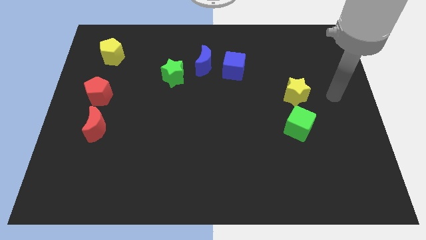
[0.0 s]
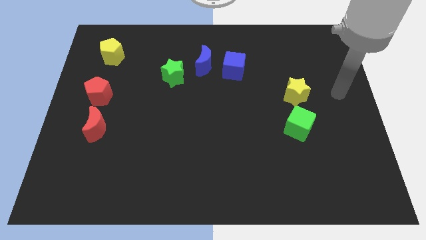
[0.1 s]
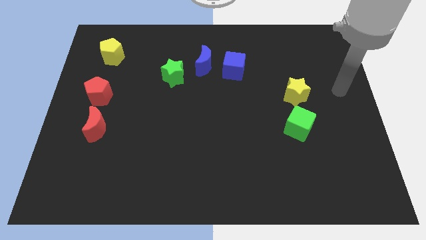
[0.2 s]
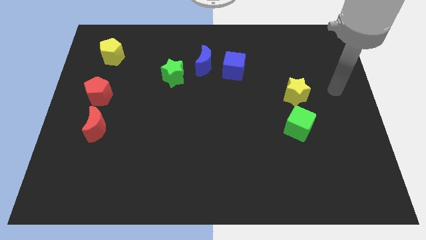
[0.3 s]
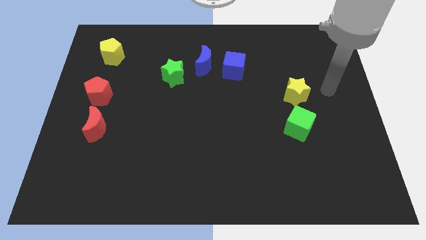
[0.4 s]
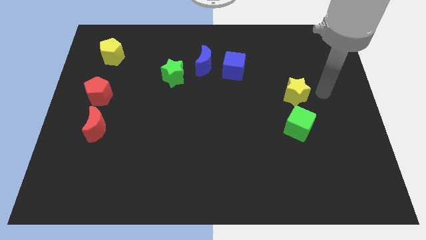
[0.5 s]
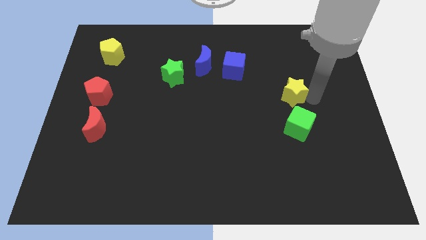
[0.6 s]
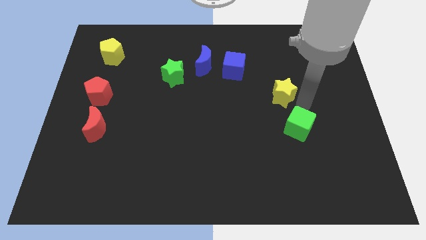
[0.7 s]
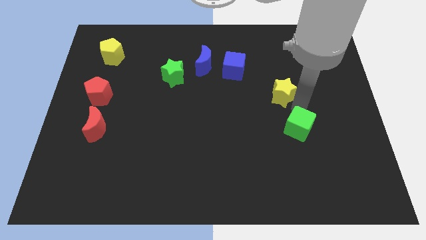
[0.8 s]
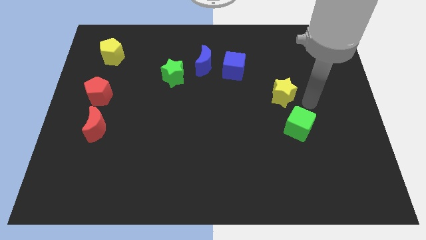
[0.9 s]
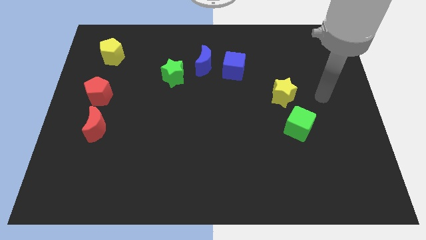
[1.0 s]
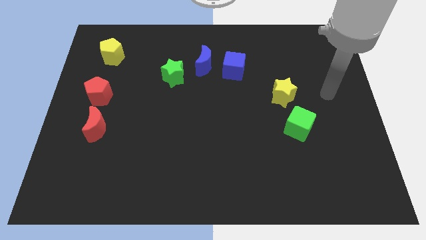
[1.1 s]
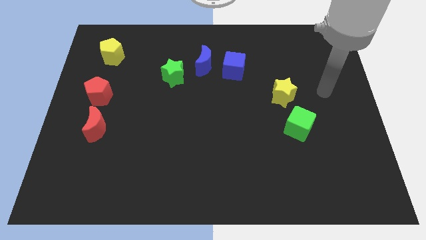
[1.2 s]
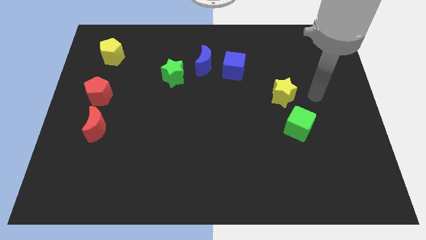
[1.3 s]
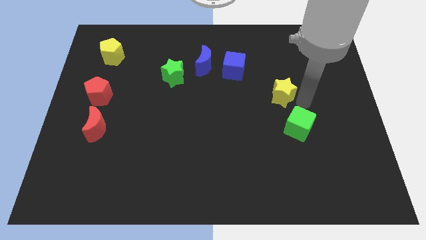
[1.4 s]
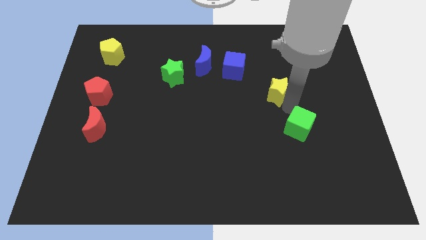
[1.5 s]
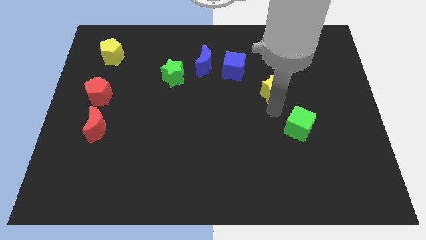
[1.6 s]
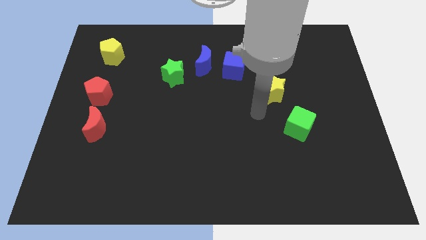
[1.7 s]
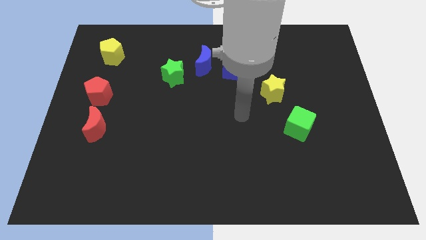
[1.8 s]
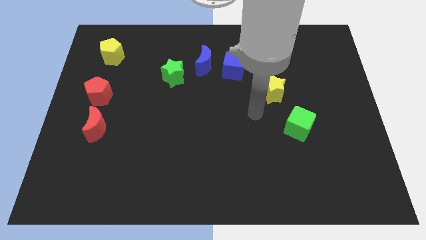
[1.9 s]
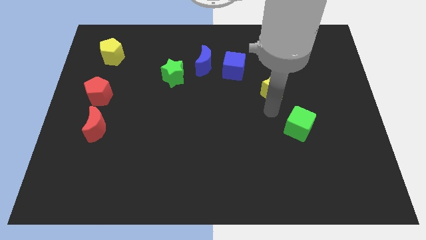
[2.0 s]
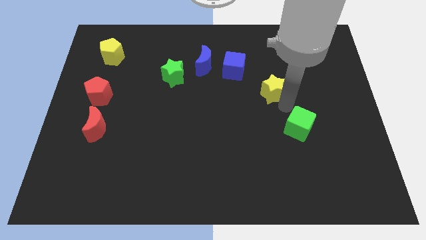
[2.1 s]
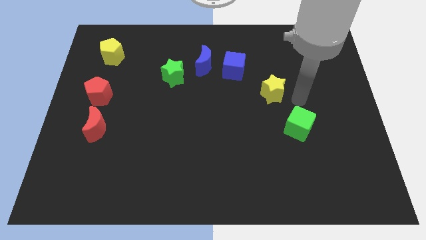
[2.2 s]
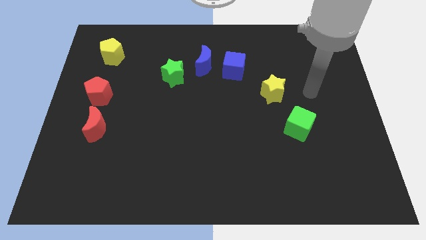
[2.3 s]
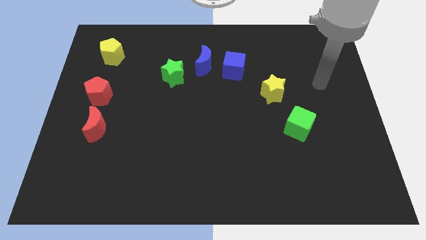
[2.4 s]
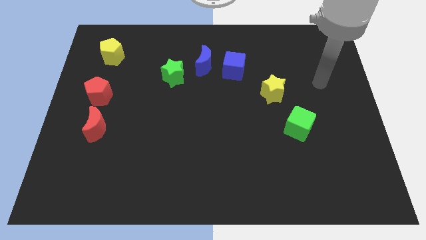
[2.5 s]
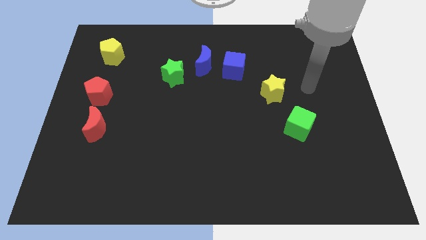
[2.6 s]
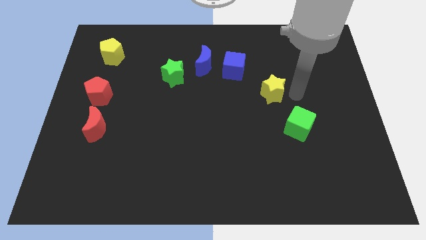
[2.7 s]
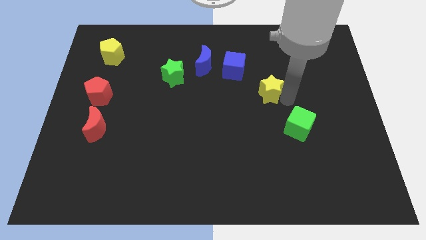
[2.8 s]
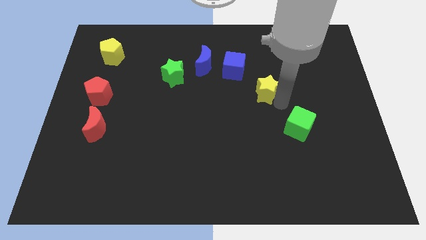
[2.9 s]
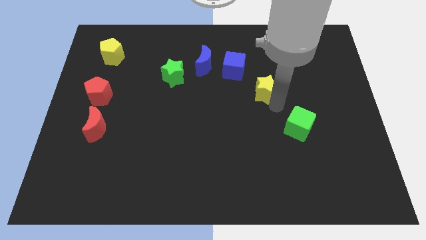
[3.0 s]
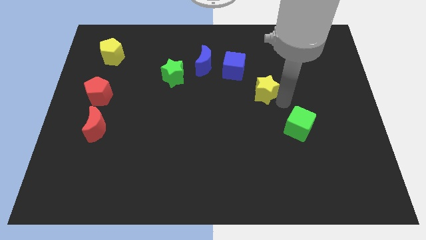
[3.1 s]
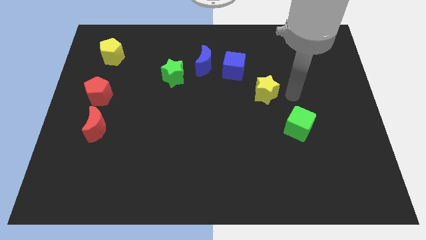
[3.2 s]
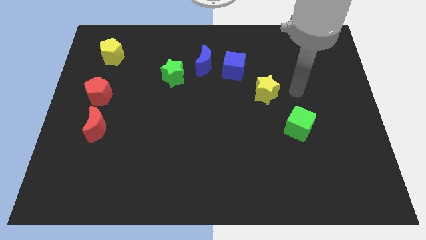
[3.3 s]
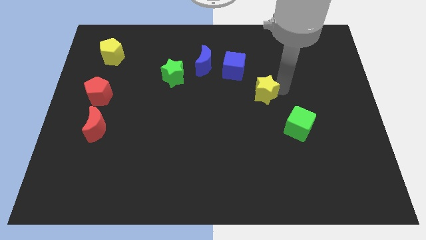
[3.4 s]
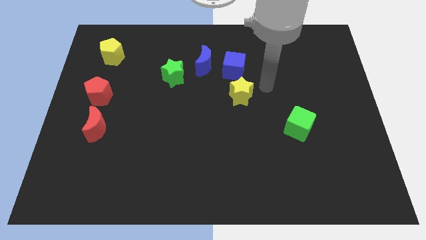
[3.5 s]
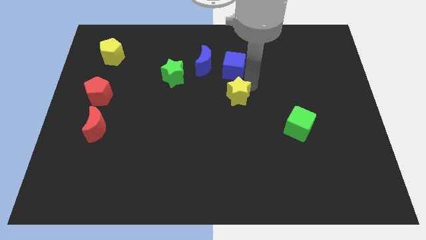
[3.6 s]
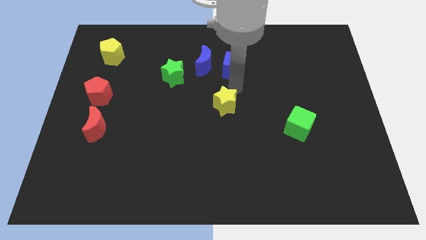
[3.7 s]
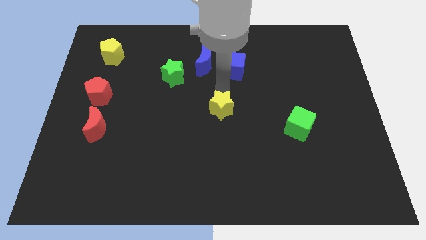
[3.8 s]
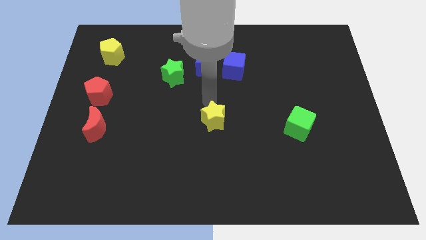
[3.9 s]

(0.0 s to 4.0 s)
place the yellow star towards the center of the board

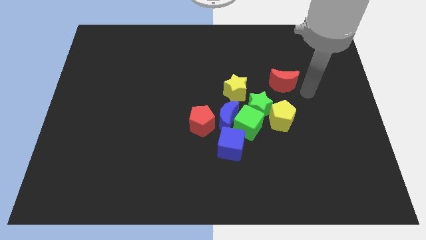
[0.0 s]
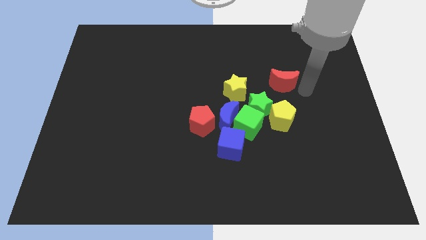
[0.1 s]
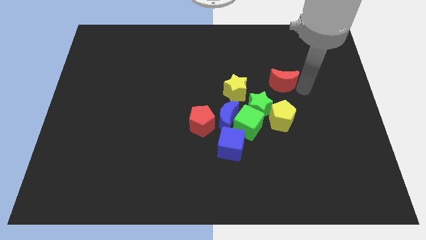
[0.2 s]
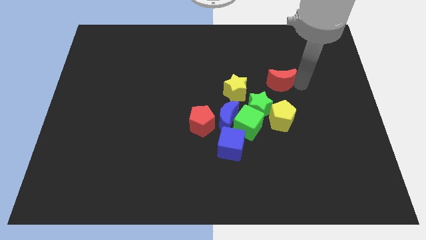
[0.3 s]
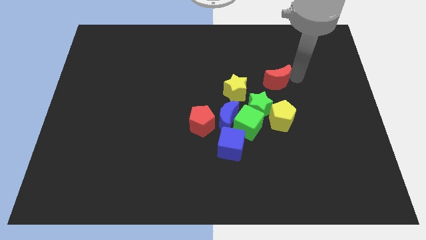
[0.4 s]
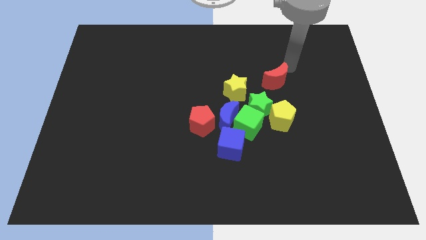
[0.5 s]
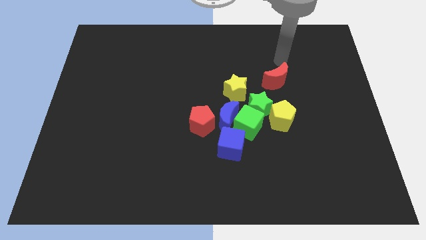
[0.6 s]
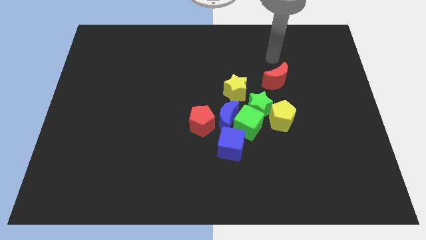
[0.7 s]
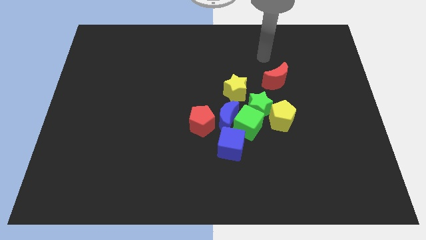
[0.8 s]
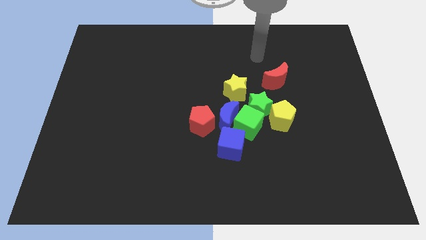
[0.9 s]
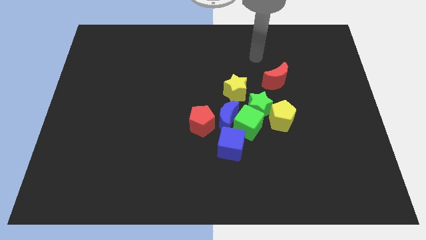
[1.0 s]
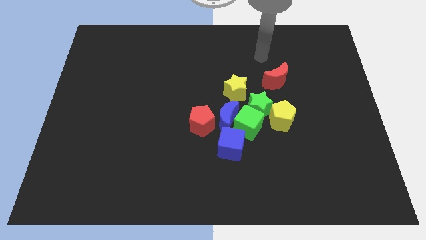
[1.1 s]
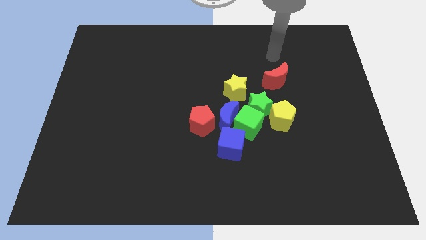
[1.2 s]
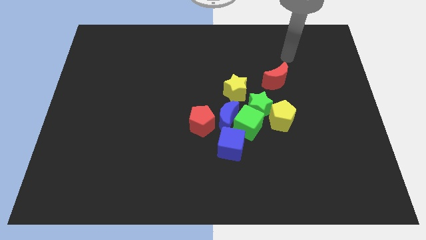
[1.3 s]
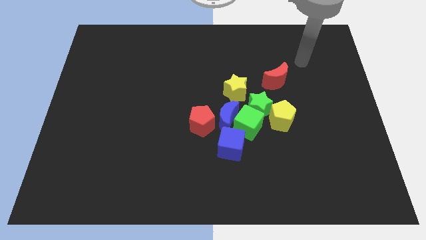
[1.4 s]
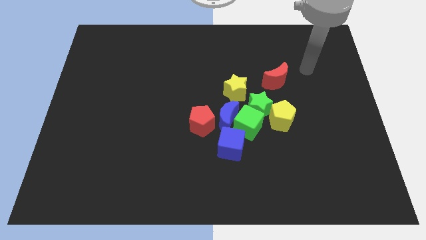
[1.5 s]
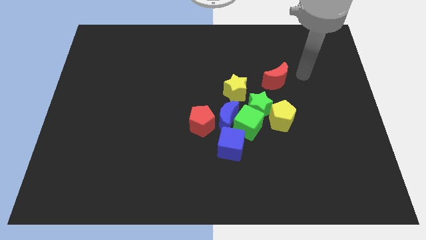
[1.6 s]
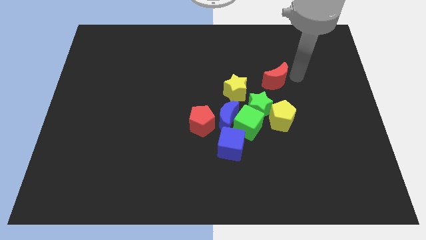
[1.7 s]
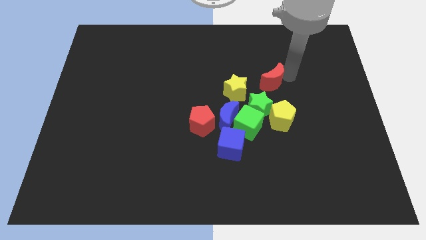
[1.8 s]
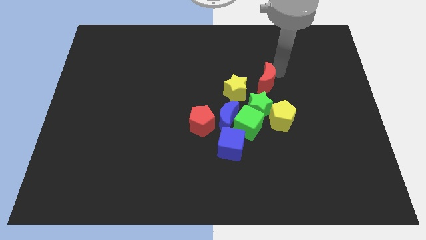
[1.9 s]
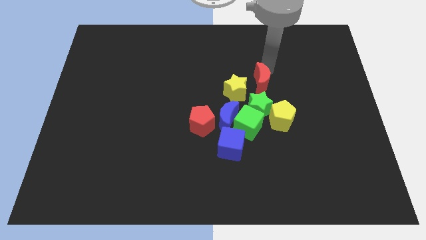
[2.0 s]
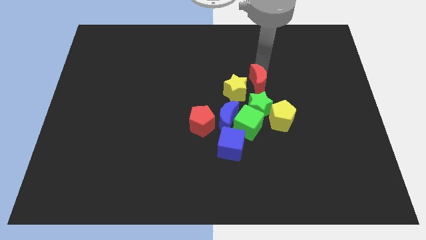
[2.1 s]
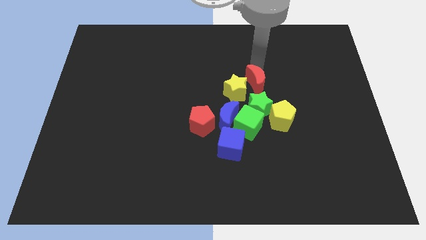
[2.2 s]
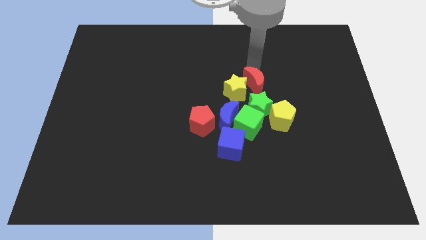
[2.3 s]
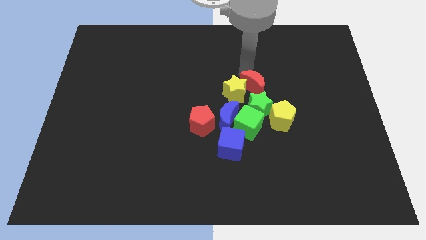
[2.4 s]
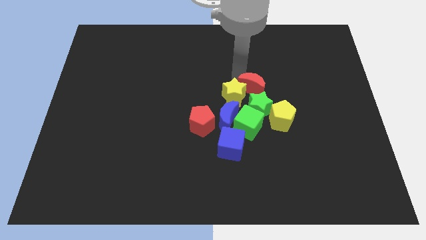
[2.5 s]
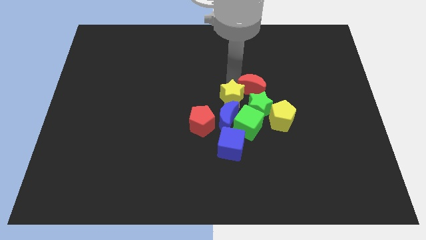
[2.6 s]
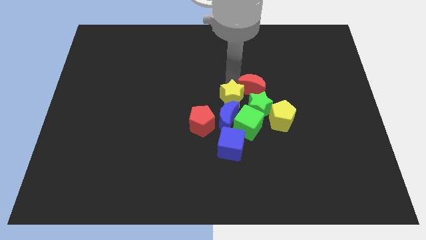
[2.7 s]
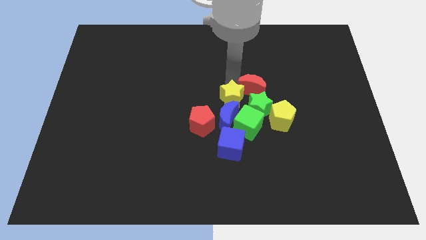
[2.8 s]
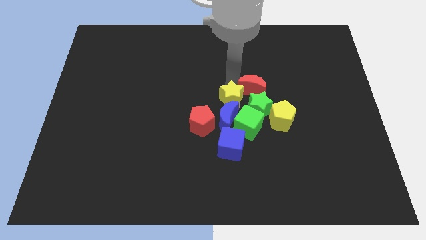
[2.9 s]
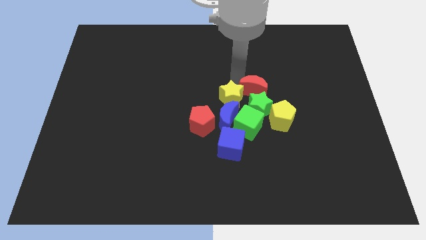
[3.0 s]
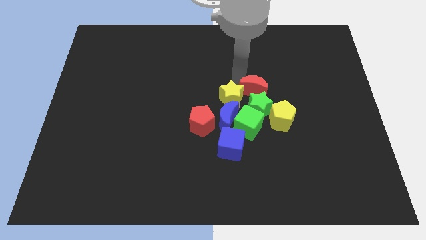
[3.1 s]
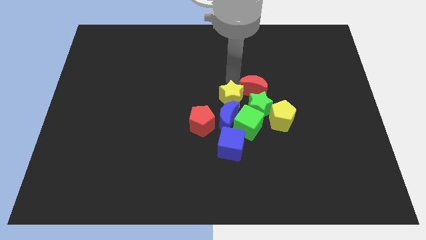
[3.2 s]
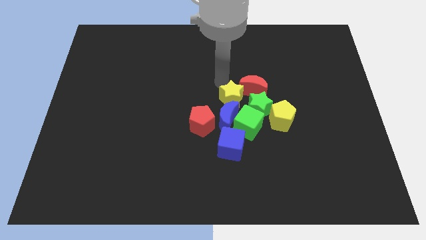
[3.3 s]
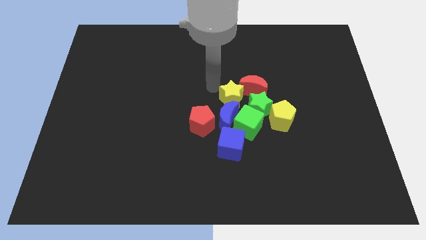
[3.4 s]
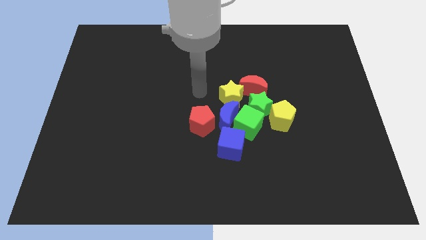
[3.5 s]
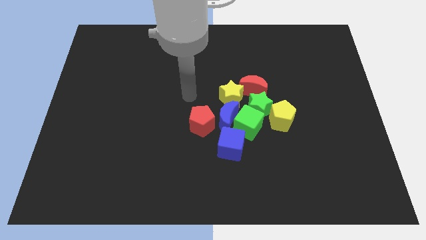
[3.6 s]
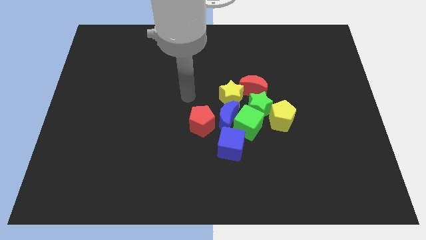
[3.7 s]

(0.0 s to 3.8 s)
push the red moon into the yellow star

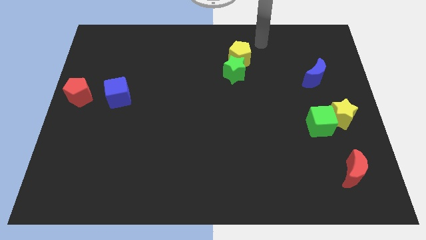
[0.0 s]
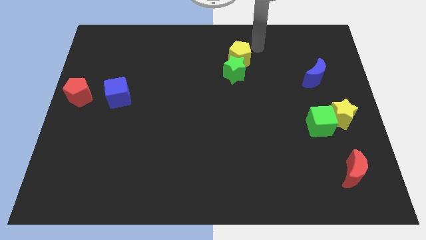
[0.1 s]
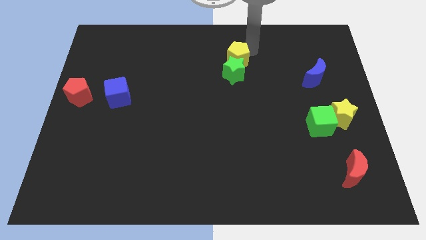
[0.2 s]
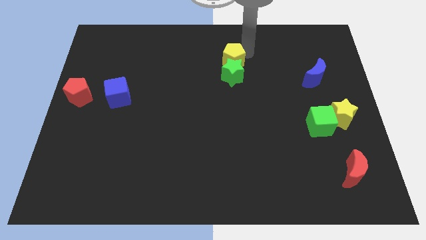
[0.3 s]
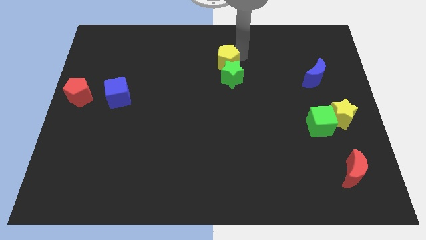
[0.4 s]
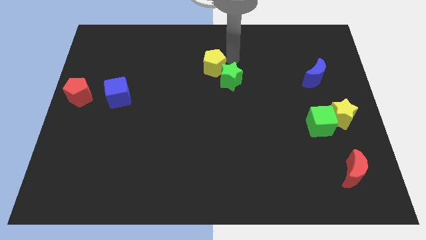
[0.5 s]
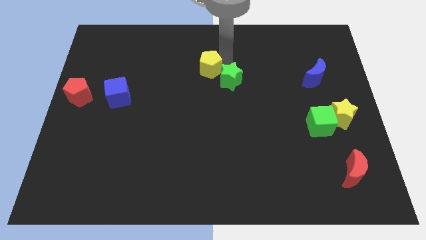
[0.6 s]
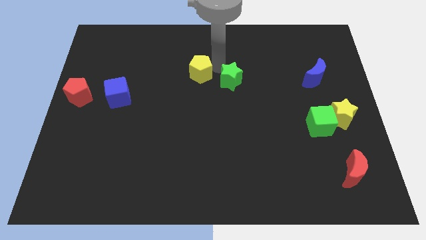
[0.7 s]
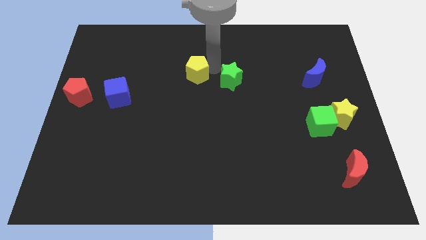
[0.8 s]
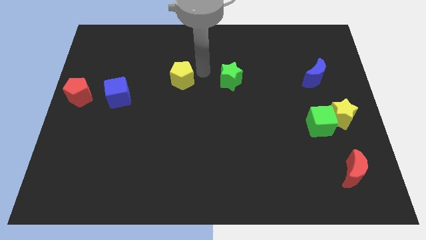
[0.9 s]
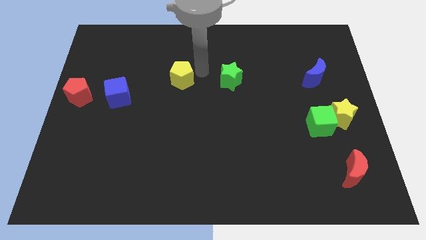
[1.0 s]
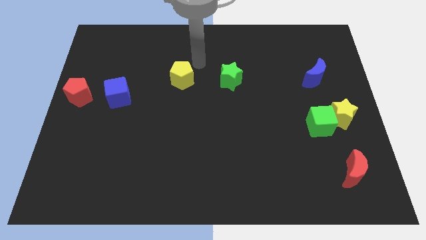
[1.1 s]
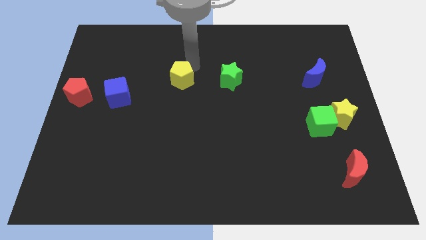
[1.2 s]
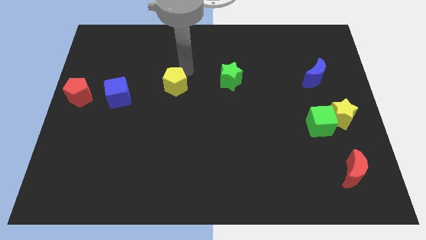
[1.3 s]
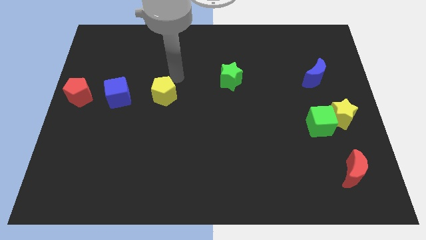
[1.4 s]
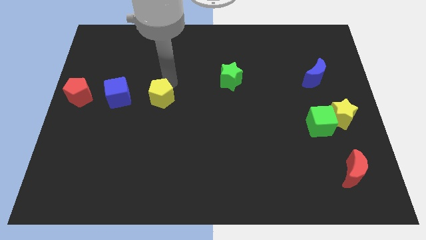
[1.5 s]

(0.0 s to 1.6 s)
separate yellow pentagon from green star
